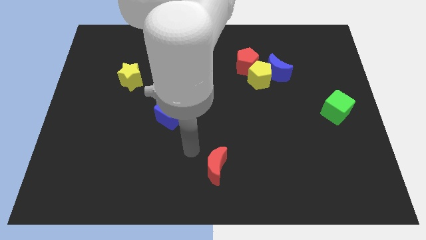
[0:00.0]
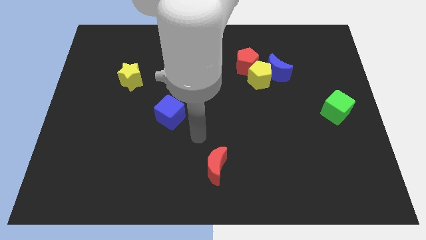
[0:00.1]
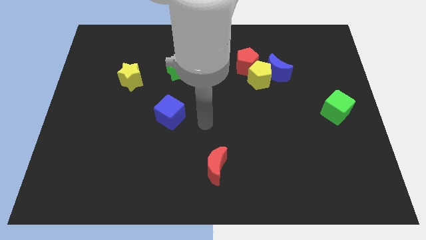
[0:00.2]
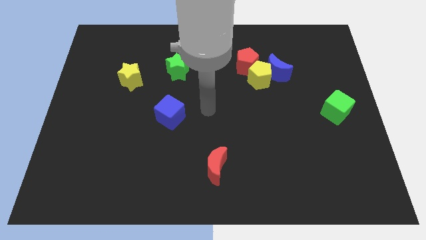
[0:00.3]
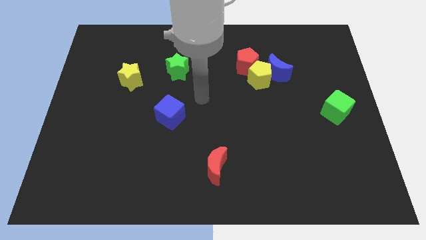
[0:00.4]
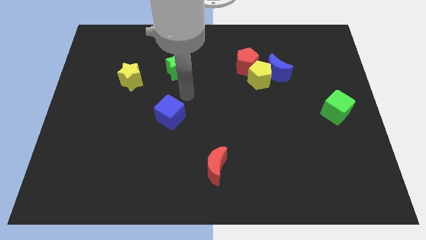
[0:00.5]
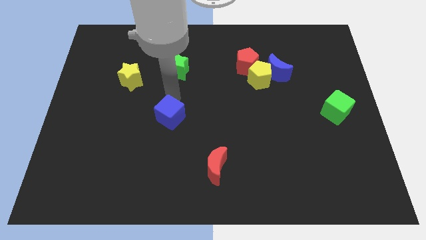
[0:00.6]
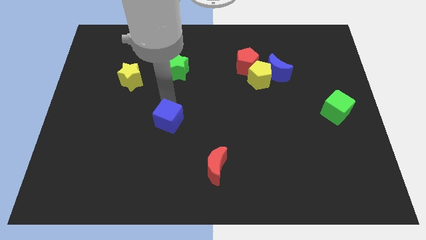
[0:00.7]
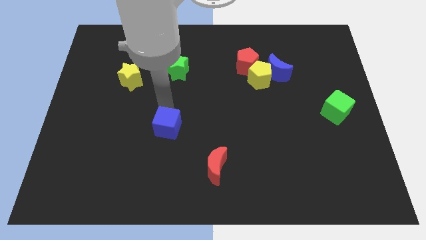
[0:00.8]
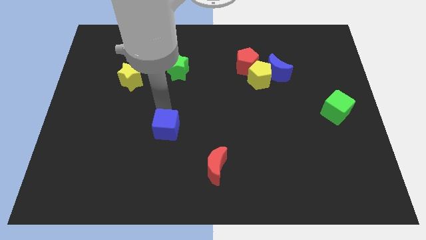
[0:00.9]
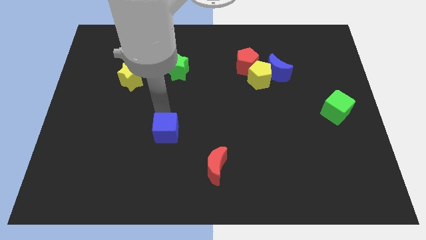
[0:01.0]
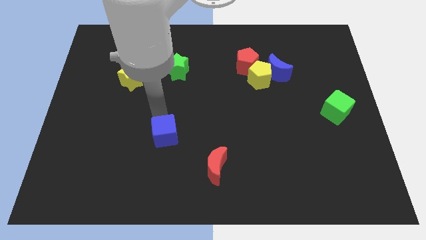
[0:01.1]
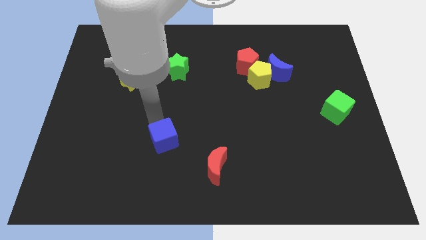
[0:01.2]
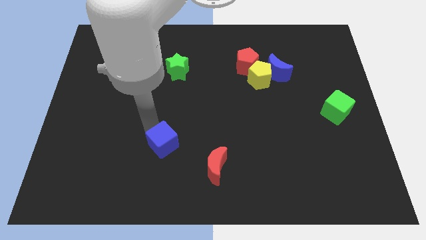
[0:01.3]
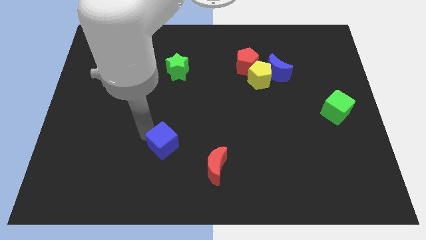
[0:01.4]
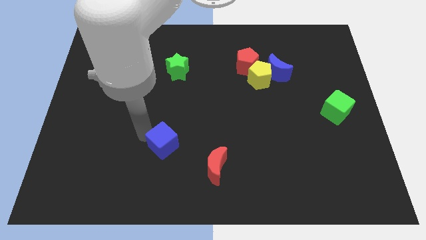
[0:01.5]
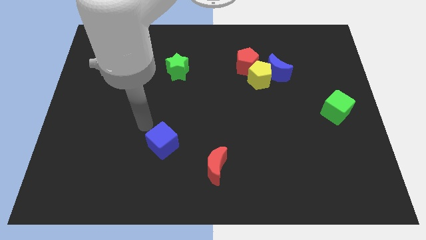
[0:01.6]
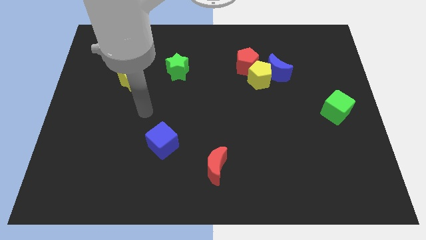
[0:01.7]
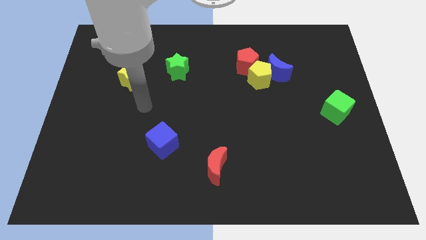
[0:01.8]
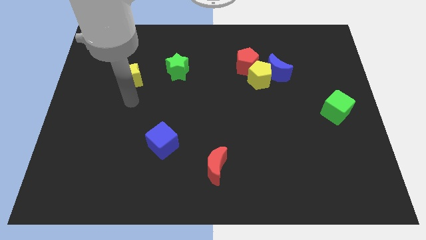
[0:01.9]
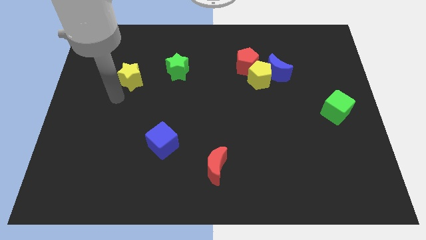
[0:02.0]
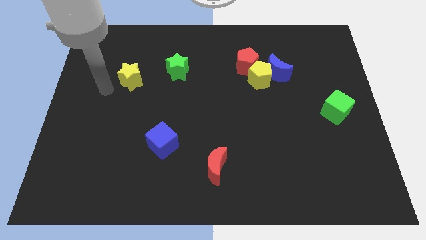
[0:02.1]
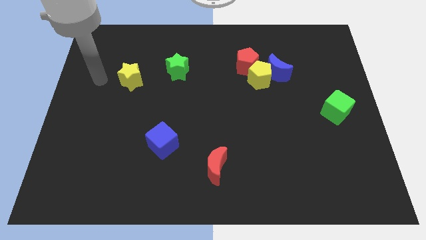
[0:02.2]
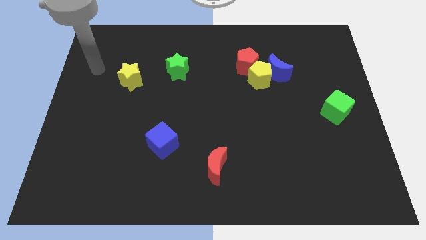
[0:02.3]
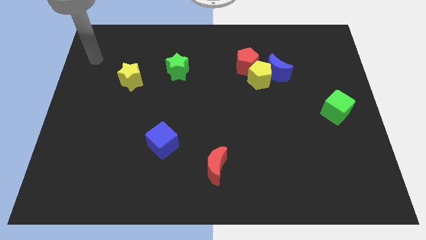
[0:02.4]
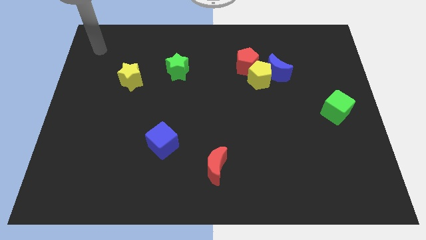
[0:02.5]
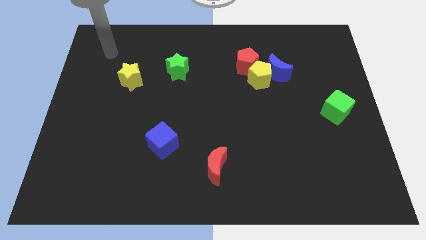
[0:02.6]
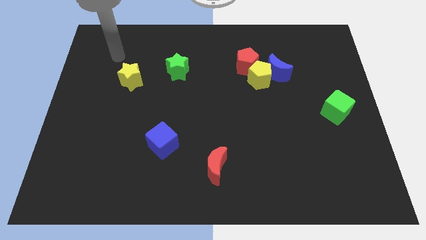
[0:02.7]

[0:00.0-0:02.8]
push the blue cube slightly to the bottom

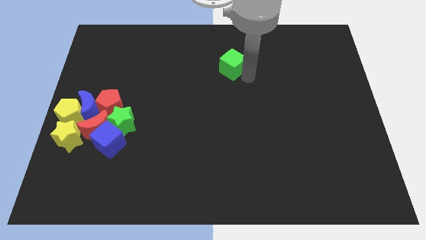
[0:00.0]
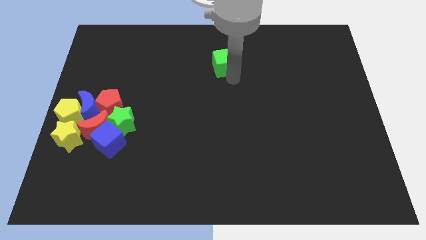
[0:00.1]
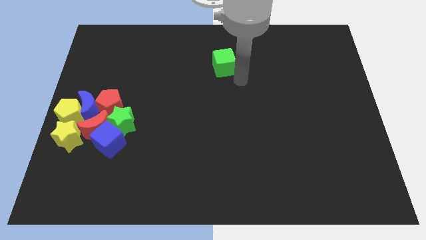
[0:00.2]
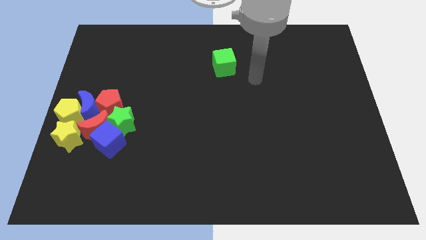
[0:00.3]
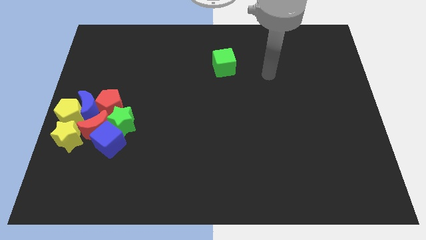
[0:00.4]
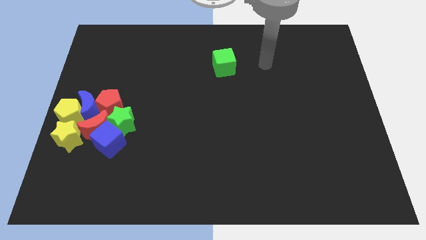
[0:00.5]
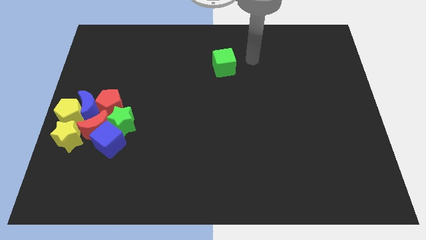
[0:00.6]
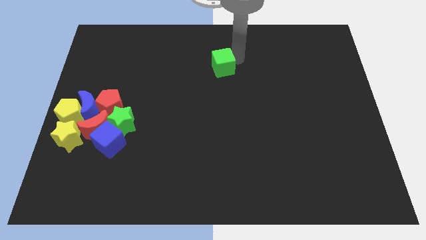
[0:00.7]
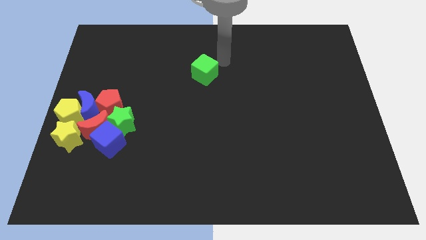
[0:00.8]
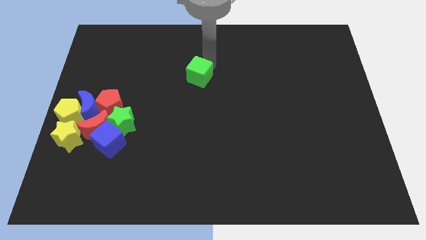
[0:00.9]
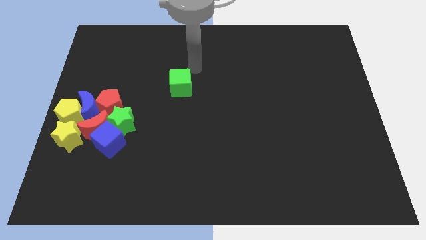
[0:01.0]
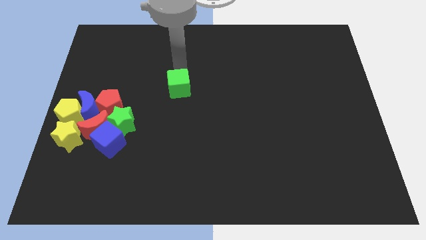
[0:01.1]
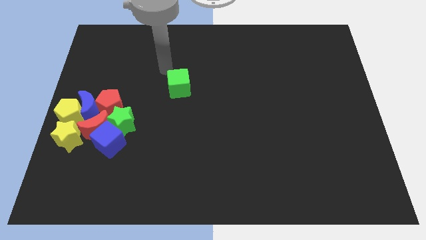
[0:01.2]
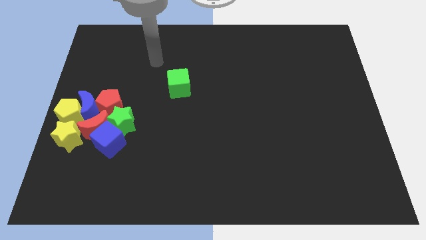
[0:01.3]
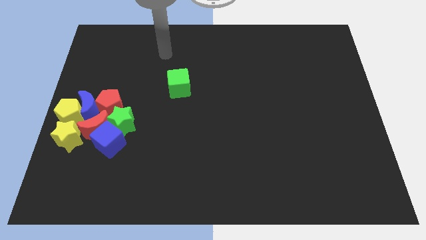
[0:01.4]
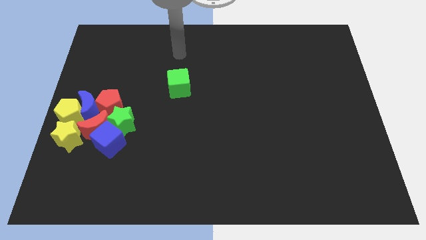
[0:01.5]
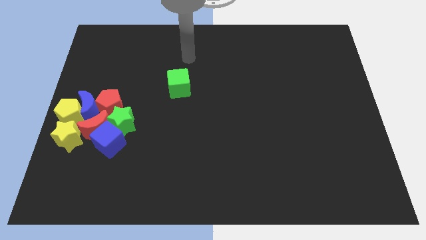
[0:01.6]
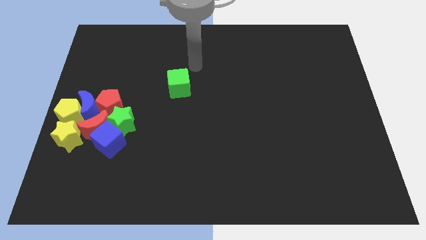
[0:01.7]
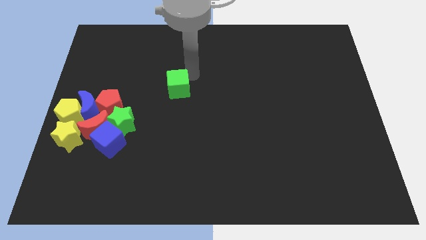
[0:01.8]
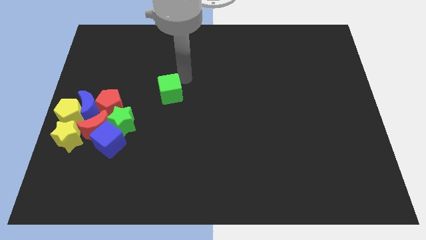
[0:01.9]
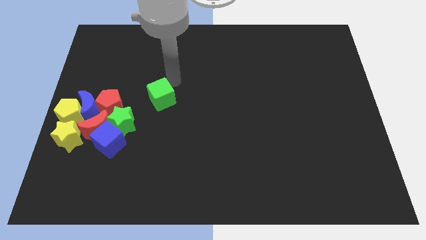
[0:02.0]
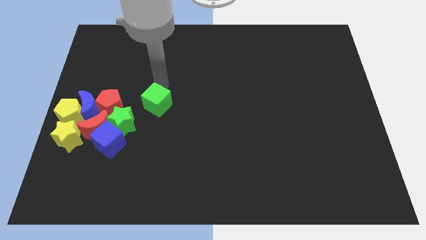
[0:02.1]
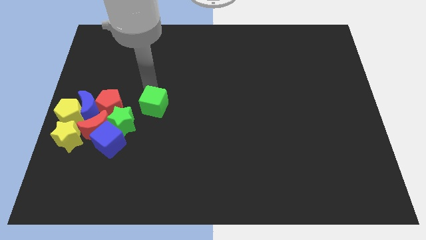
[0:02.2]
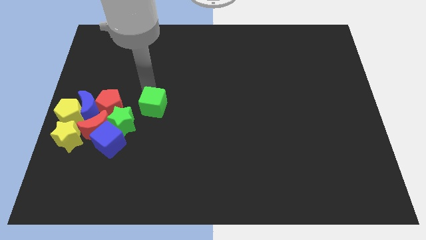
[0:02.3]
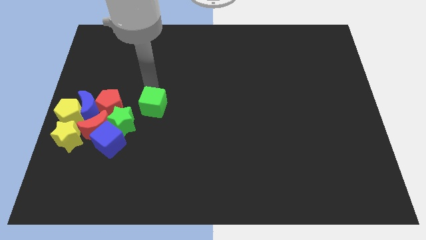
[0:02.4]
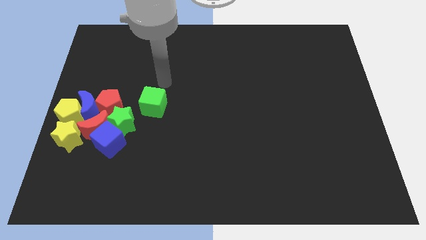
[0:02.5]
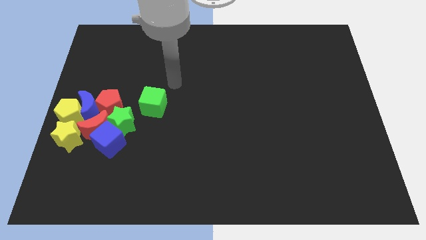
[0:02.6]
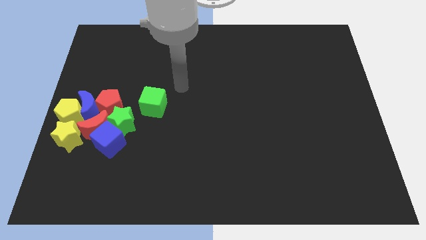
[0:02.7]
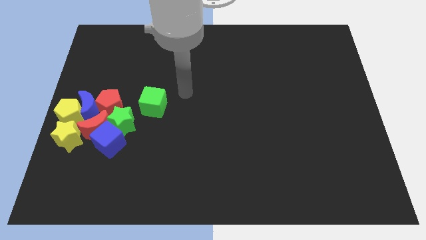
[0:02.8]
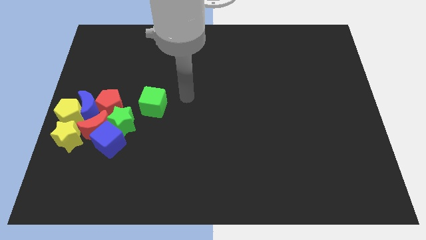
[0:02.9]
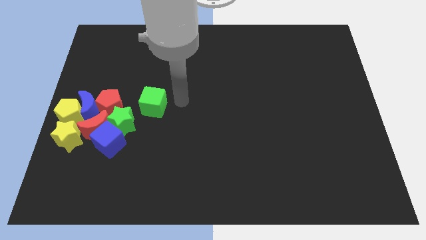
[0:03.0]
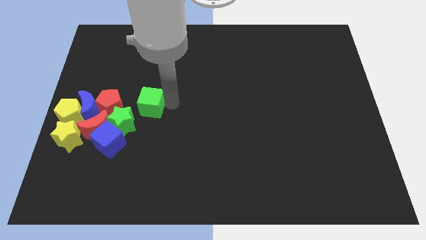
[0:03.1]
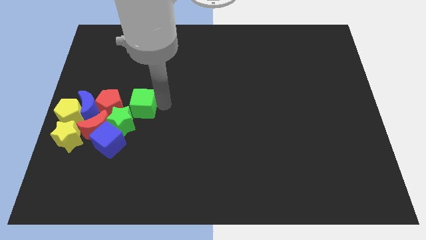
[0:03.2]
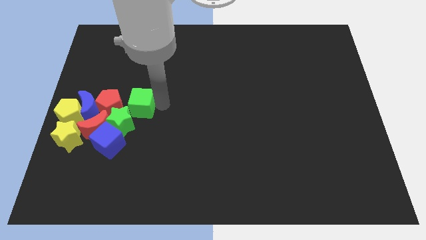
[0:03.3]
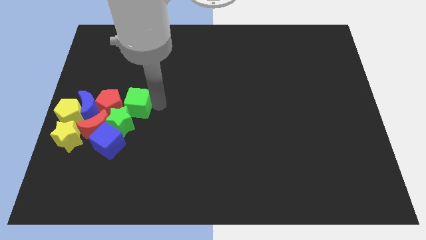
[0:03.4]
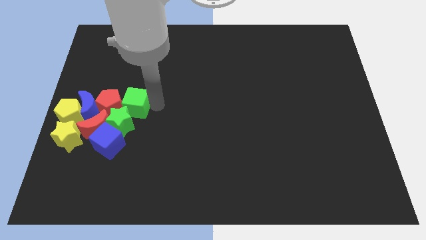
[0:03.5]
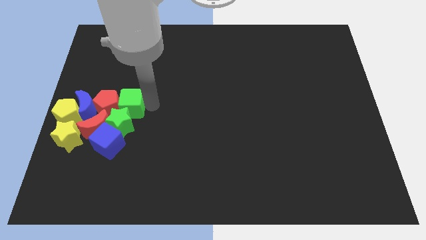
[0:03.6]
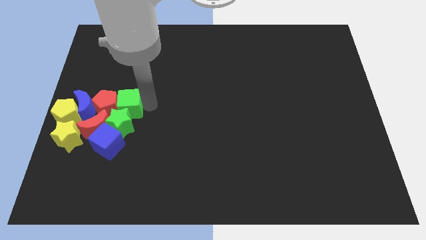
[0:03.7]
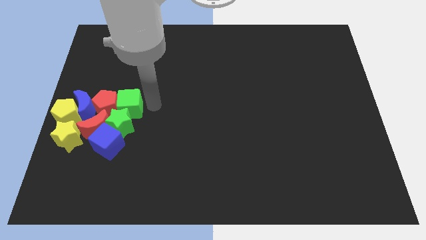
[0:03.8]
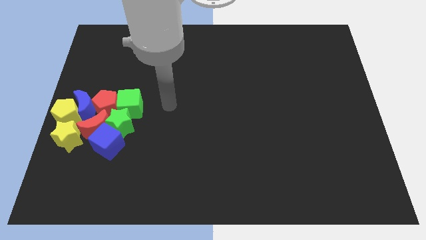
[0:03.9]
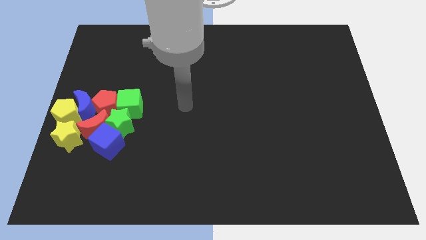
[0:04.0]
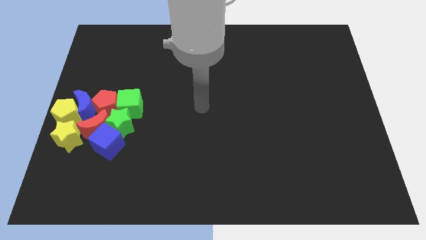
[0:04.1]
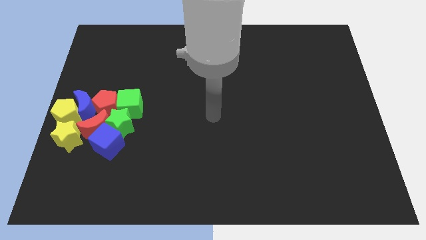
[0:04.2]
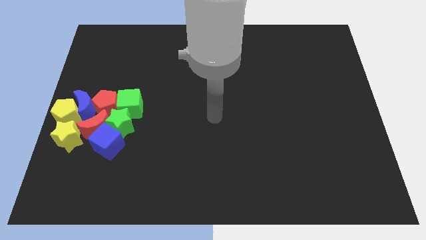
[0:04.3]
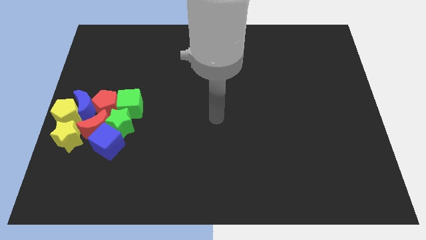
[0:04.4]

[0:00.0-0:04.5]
group up all the blocks at the center left of the board

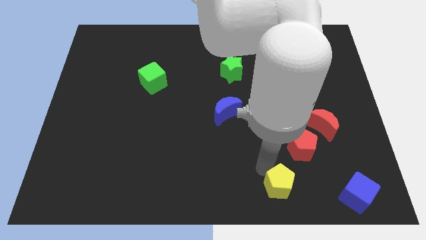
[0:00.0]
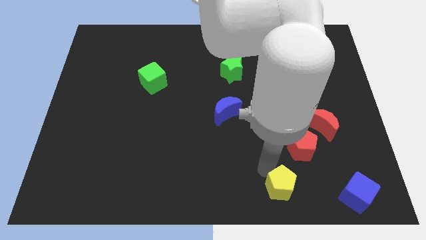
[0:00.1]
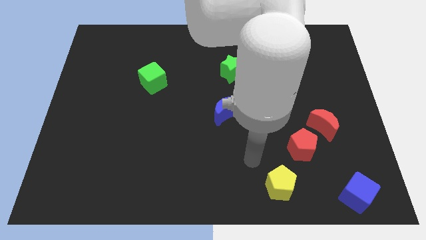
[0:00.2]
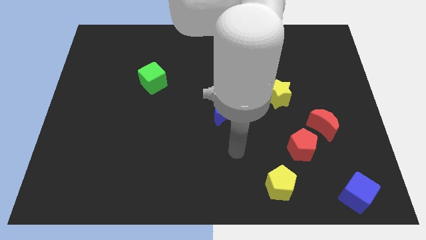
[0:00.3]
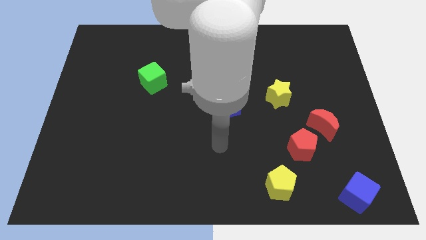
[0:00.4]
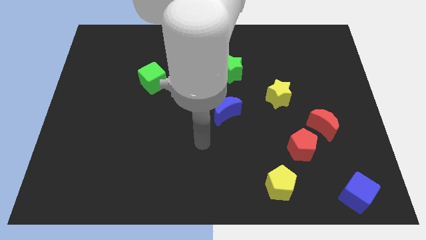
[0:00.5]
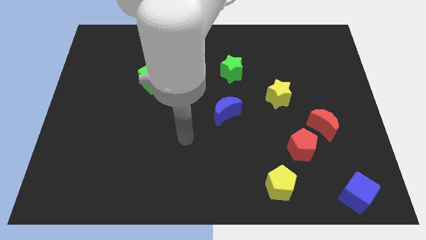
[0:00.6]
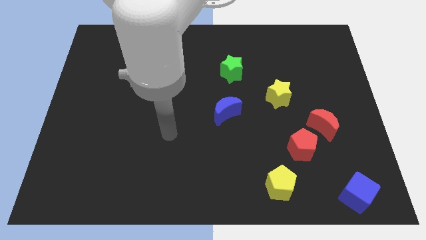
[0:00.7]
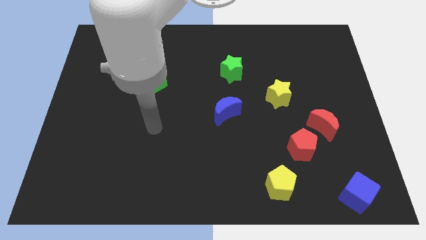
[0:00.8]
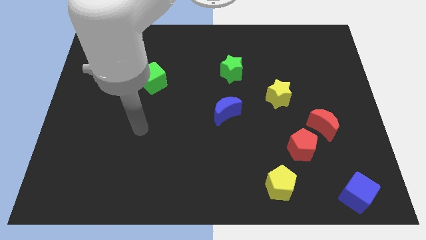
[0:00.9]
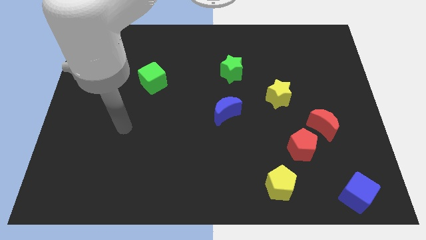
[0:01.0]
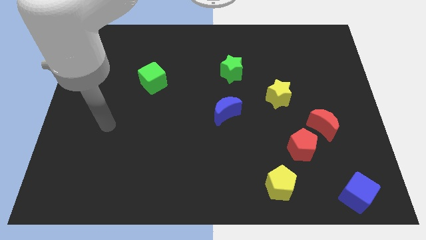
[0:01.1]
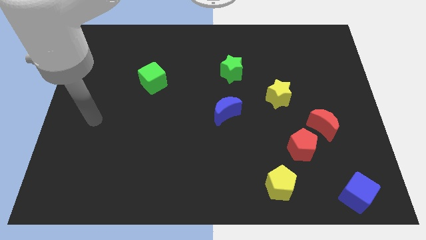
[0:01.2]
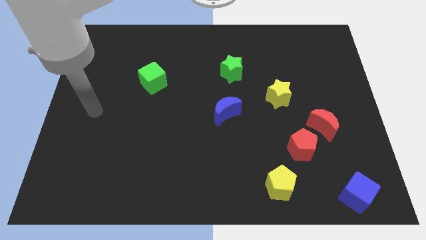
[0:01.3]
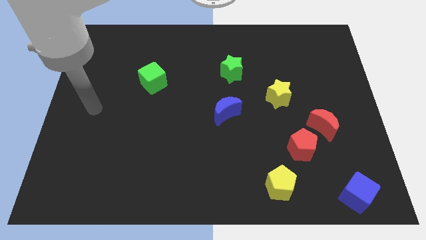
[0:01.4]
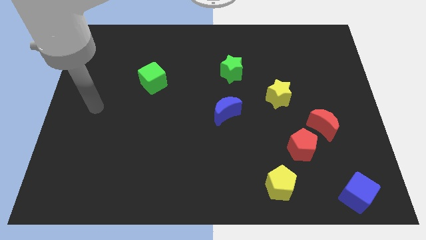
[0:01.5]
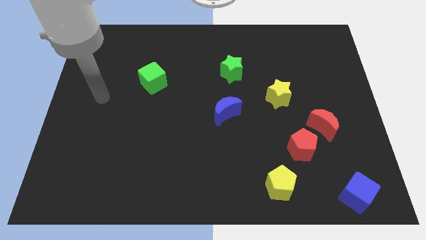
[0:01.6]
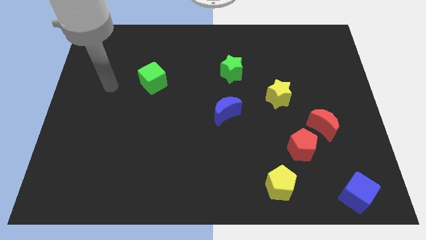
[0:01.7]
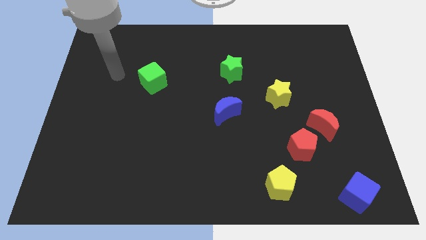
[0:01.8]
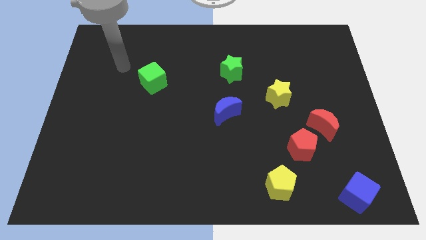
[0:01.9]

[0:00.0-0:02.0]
move your arm away from the yellow pentagon
